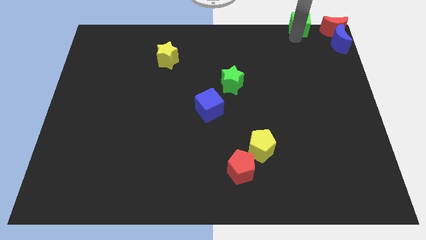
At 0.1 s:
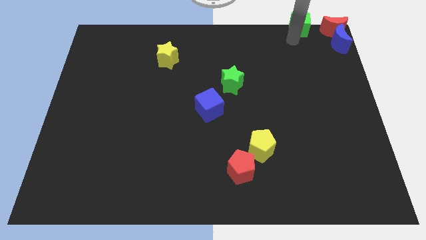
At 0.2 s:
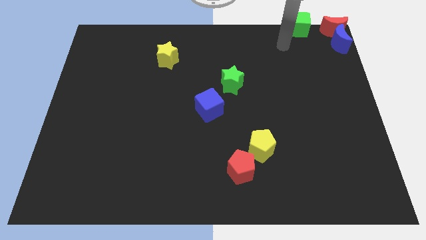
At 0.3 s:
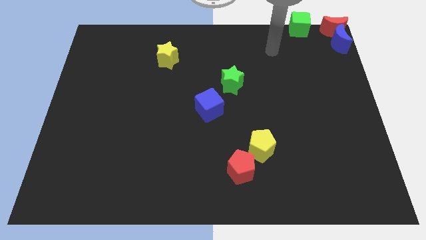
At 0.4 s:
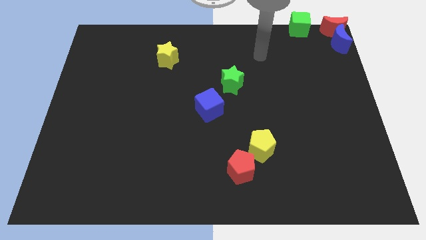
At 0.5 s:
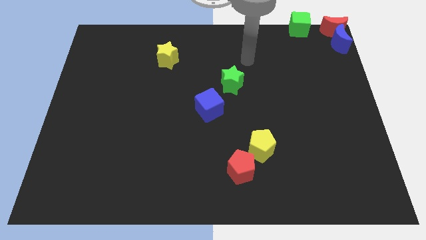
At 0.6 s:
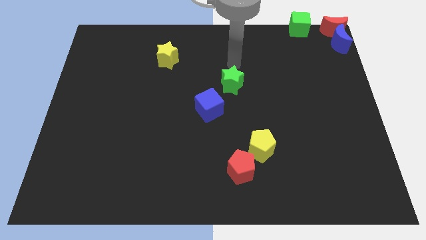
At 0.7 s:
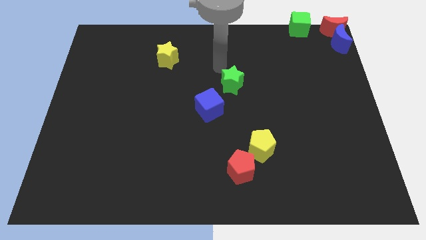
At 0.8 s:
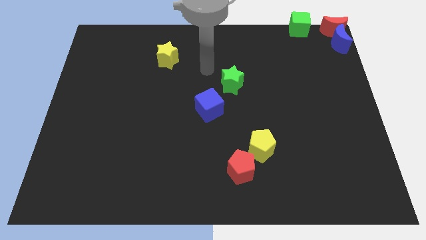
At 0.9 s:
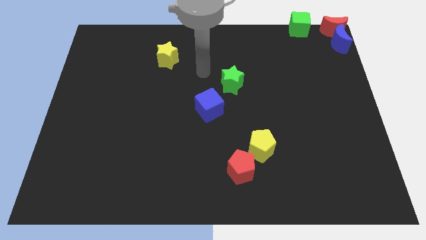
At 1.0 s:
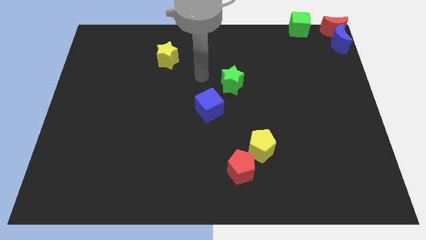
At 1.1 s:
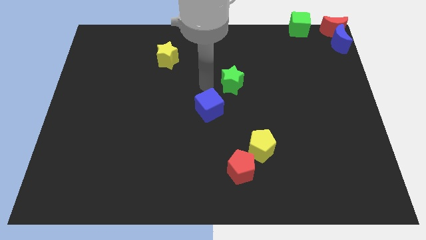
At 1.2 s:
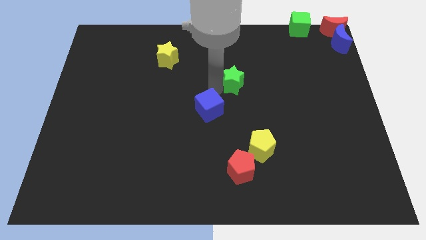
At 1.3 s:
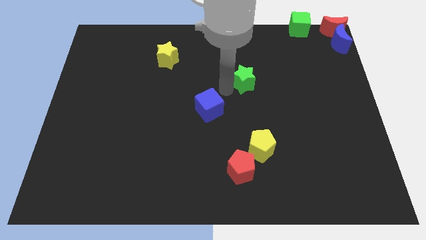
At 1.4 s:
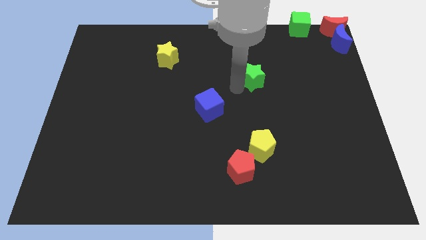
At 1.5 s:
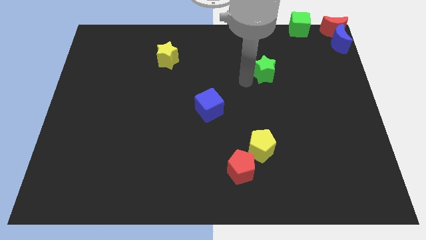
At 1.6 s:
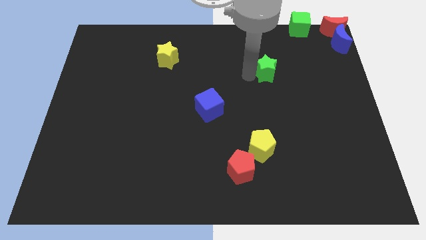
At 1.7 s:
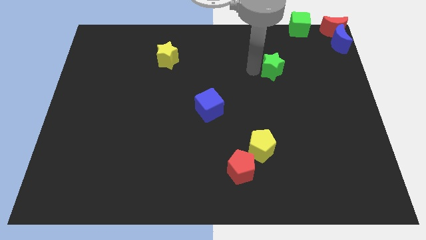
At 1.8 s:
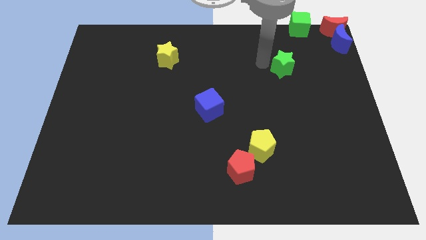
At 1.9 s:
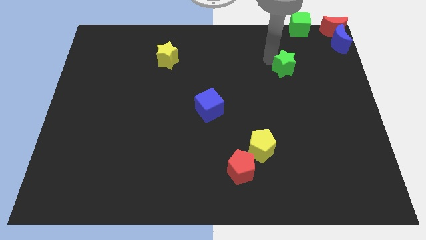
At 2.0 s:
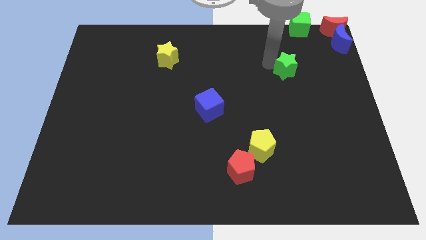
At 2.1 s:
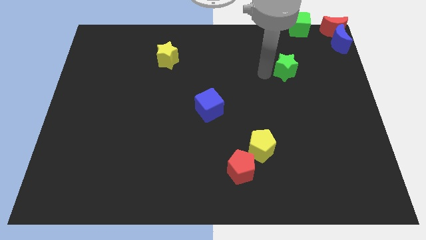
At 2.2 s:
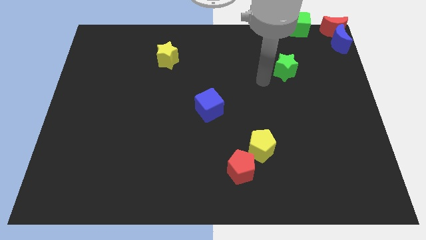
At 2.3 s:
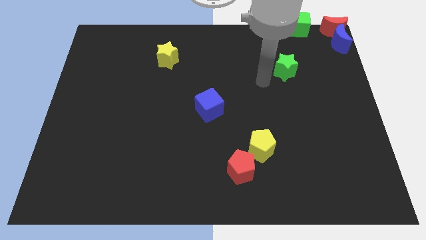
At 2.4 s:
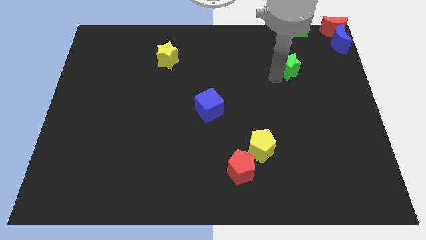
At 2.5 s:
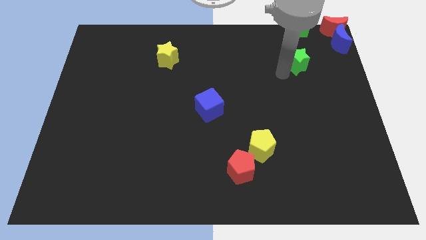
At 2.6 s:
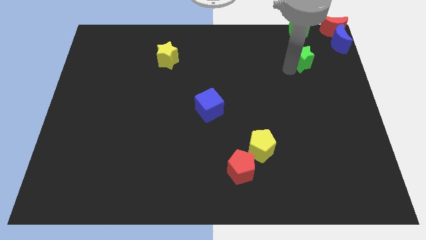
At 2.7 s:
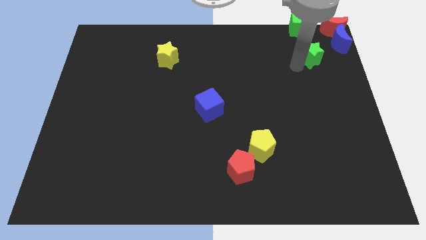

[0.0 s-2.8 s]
place green star to the bottom of green cube

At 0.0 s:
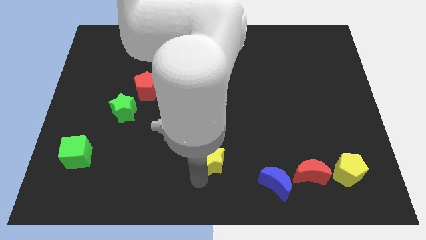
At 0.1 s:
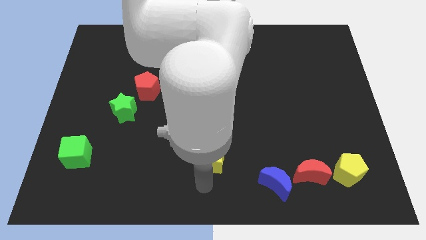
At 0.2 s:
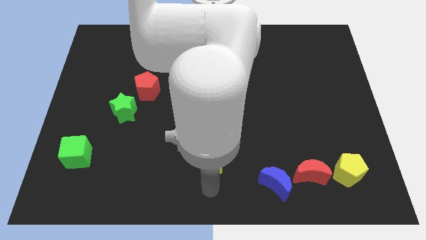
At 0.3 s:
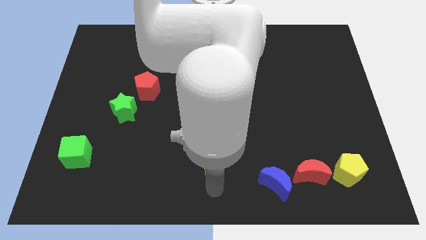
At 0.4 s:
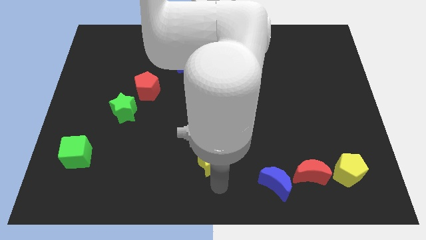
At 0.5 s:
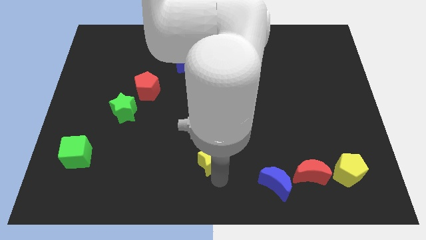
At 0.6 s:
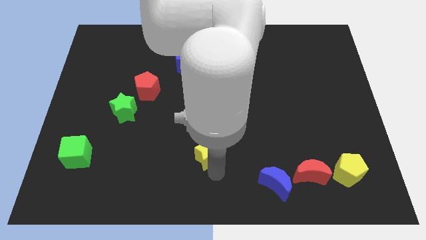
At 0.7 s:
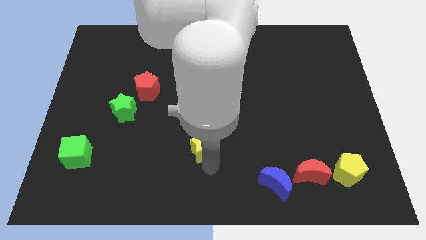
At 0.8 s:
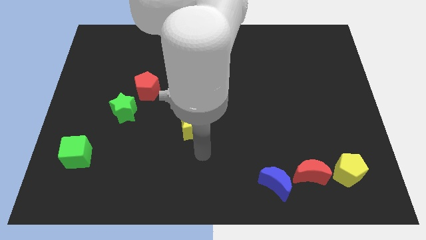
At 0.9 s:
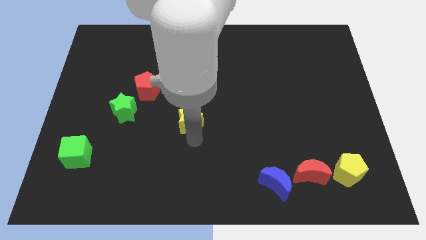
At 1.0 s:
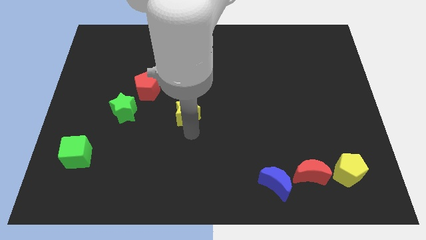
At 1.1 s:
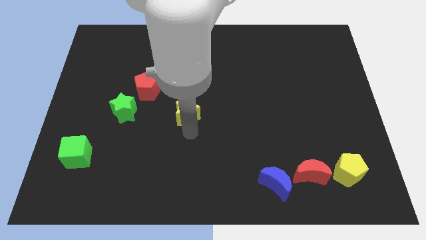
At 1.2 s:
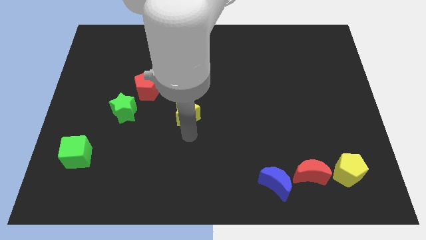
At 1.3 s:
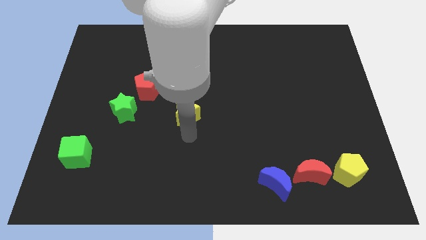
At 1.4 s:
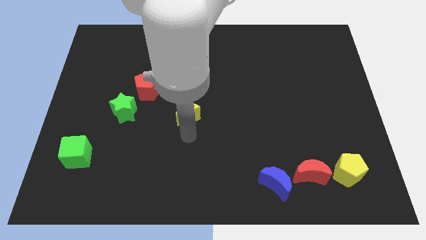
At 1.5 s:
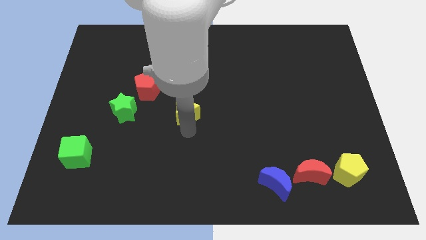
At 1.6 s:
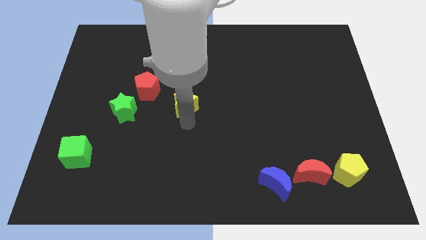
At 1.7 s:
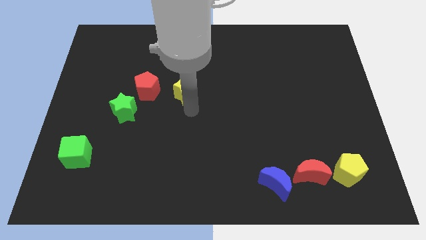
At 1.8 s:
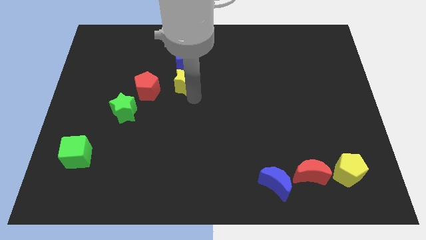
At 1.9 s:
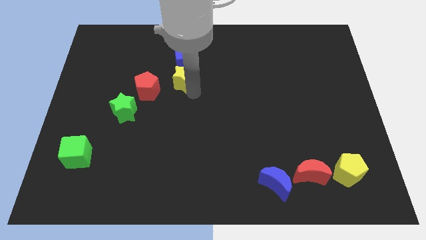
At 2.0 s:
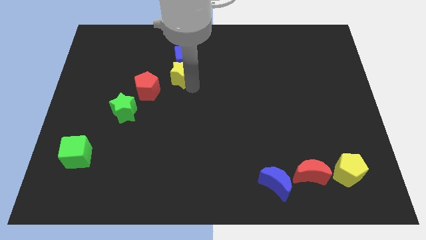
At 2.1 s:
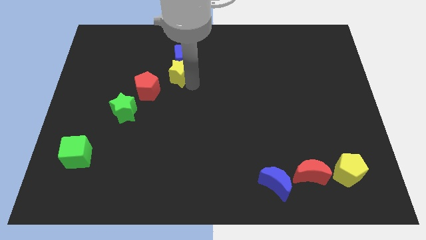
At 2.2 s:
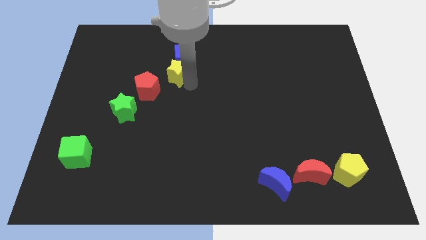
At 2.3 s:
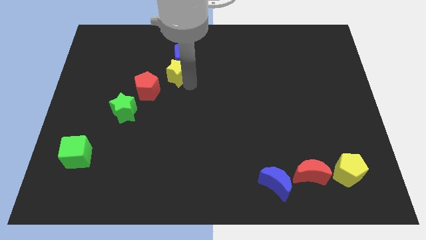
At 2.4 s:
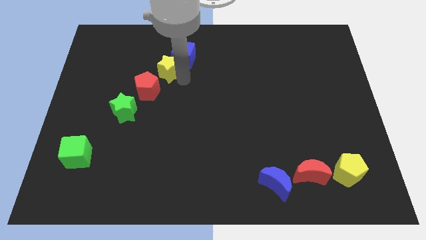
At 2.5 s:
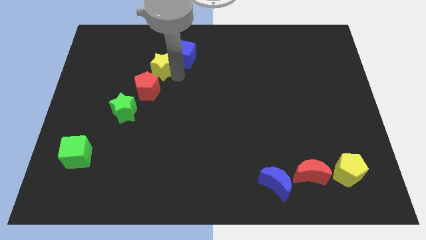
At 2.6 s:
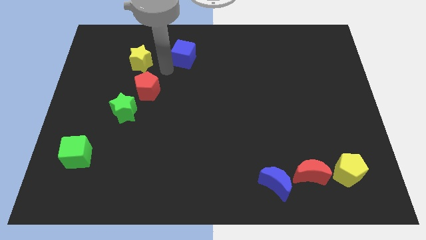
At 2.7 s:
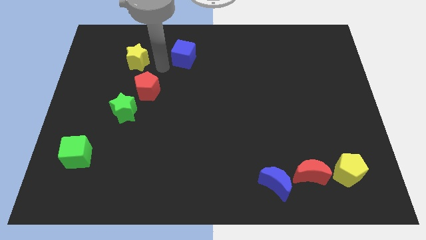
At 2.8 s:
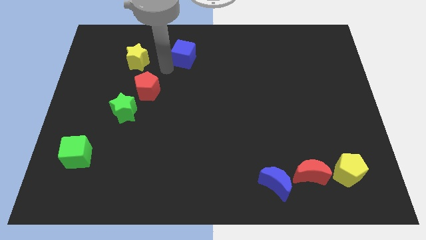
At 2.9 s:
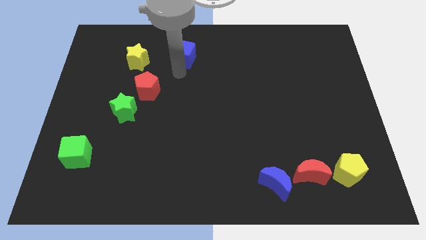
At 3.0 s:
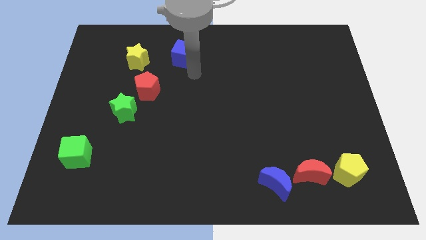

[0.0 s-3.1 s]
move the yellow star to the top left of the red pentagon

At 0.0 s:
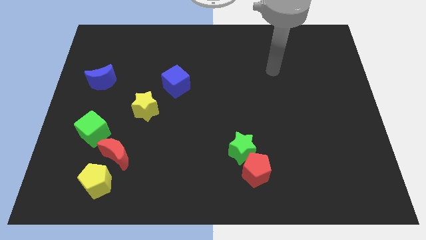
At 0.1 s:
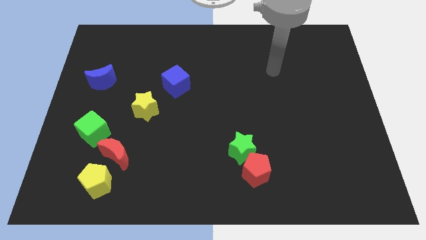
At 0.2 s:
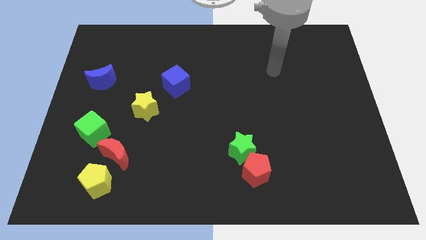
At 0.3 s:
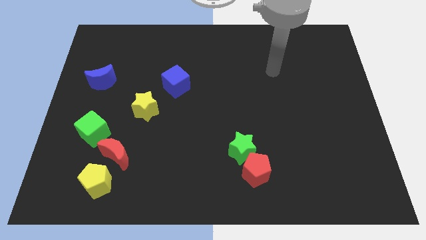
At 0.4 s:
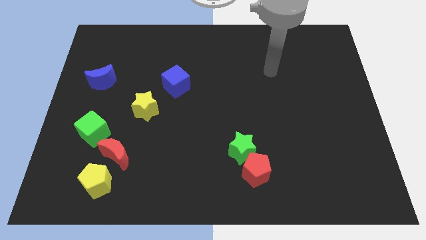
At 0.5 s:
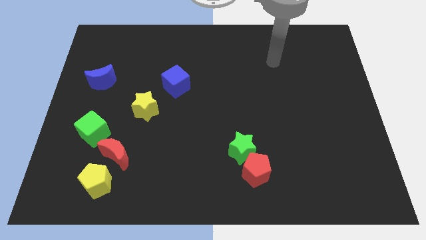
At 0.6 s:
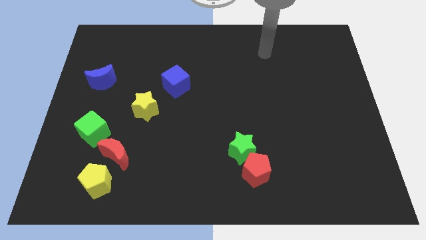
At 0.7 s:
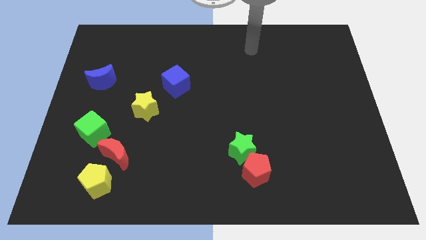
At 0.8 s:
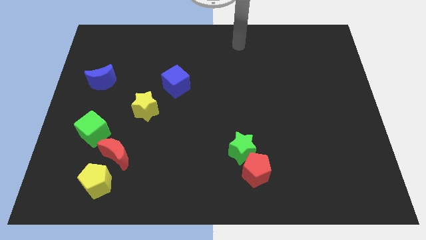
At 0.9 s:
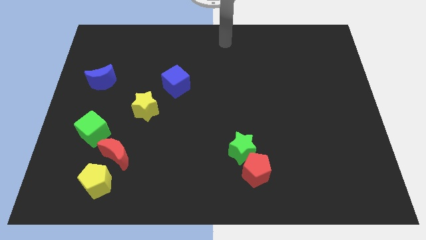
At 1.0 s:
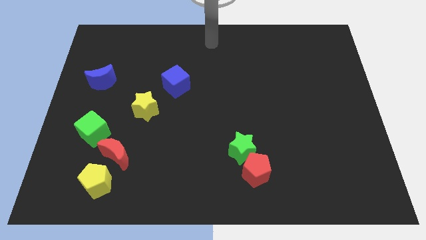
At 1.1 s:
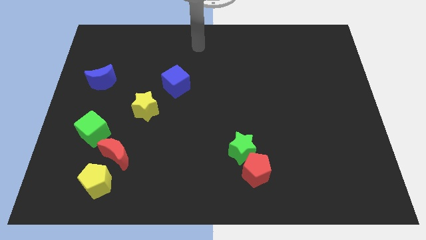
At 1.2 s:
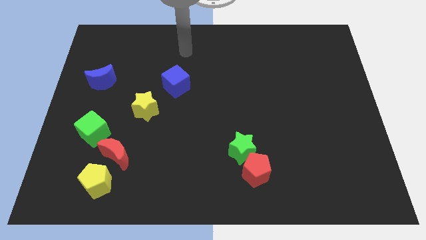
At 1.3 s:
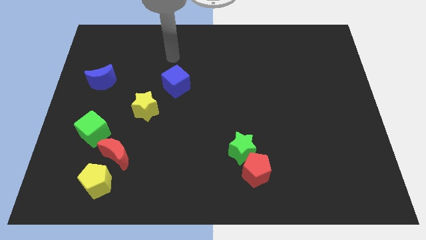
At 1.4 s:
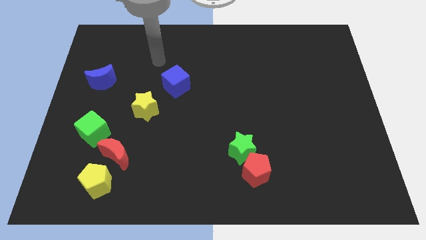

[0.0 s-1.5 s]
place your arm above blue cube

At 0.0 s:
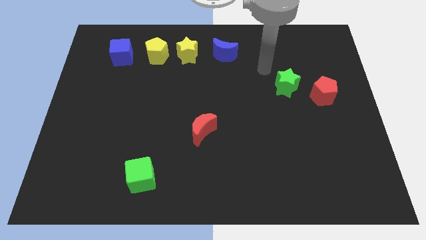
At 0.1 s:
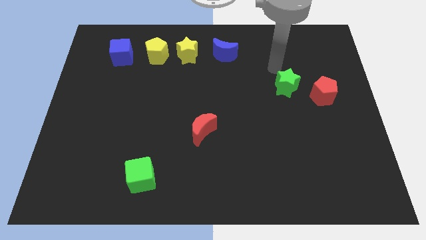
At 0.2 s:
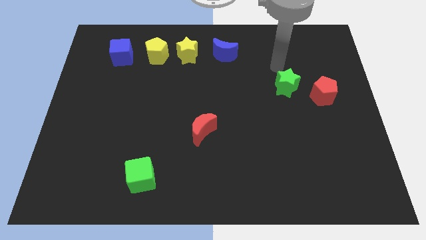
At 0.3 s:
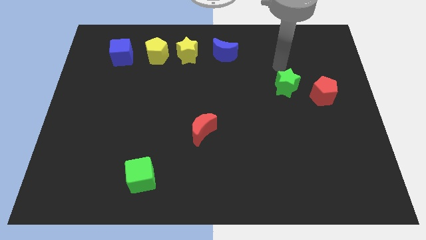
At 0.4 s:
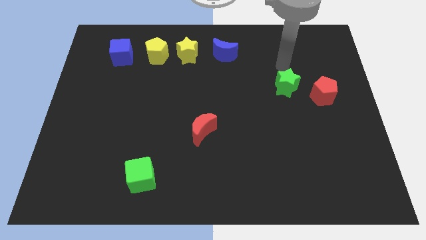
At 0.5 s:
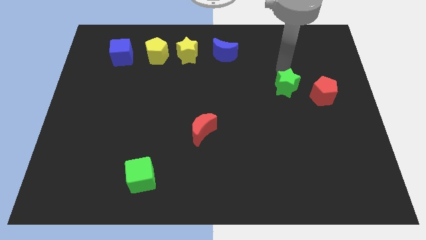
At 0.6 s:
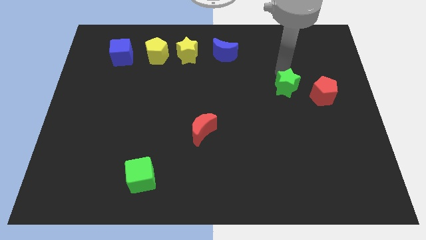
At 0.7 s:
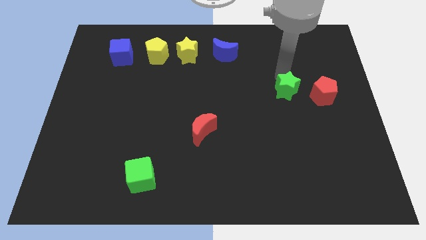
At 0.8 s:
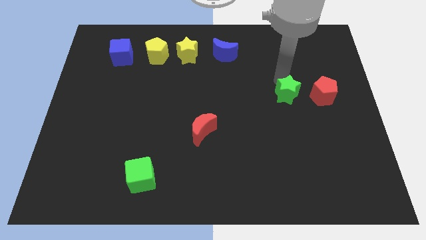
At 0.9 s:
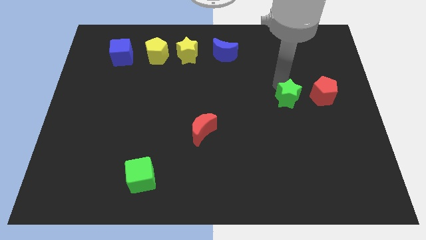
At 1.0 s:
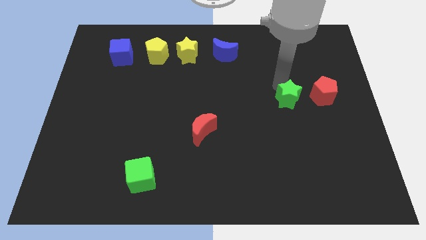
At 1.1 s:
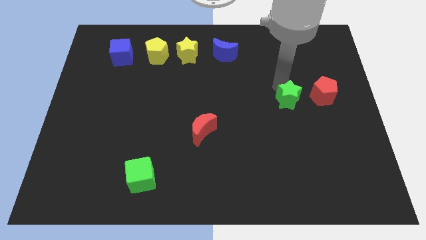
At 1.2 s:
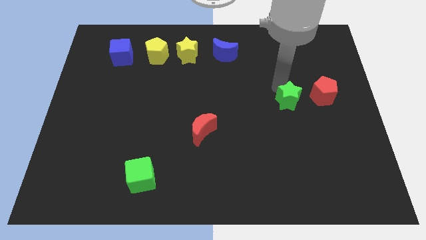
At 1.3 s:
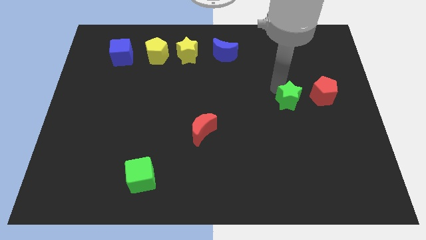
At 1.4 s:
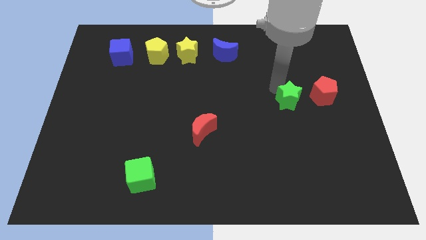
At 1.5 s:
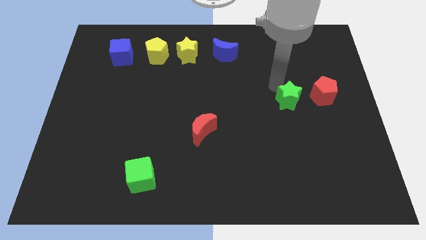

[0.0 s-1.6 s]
place the green star close to the red pentagon
